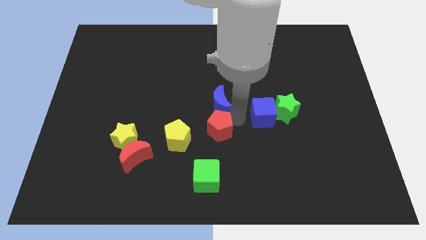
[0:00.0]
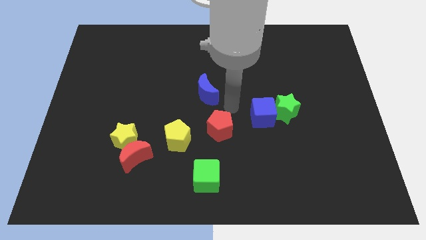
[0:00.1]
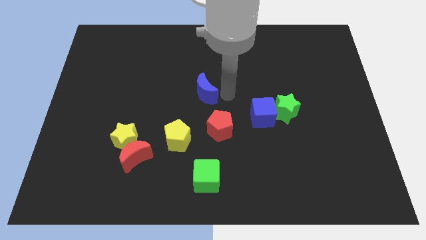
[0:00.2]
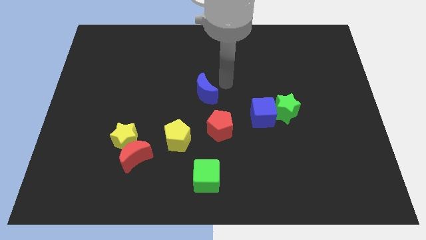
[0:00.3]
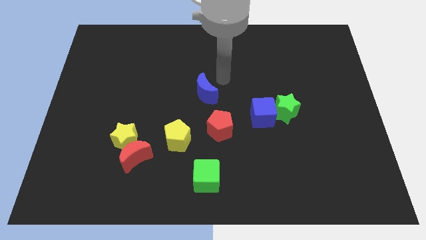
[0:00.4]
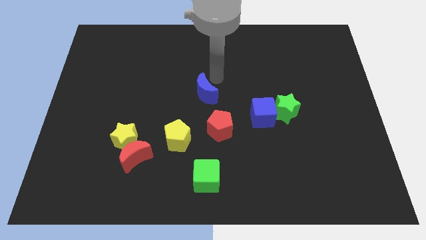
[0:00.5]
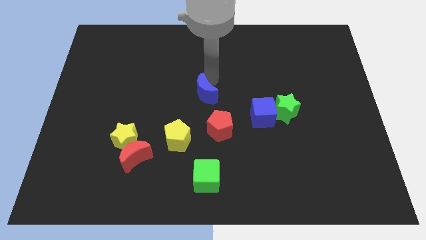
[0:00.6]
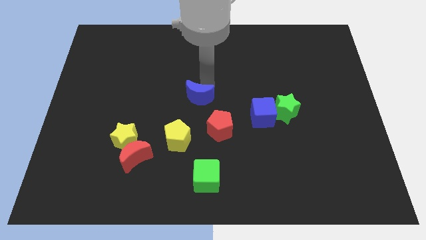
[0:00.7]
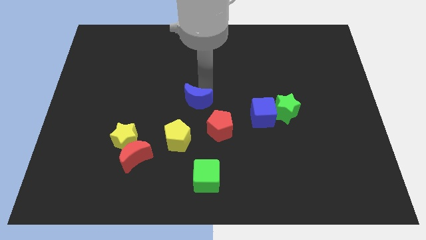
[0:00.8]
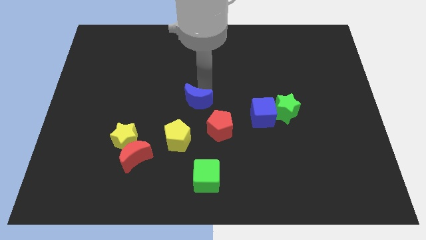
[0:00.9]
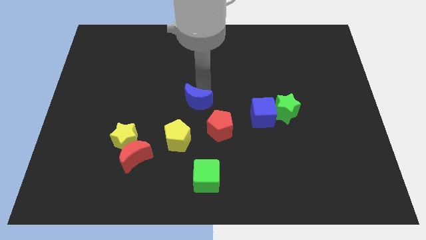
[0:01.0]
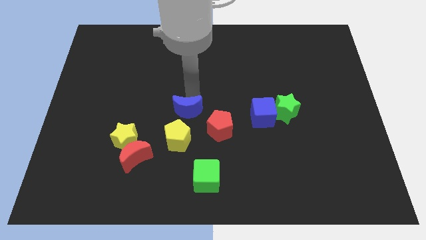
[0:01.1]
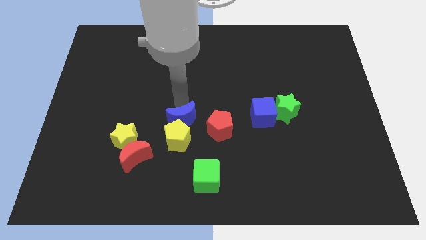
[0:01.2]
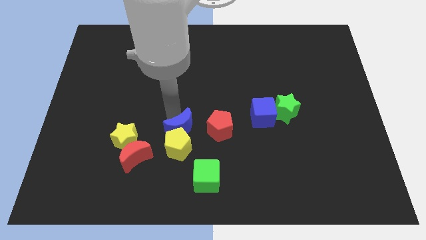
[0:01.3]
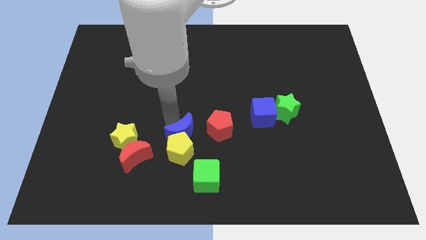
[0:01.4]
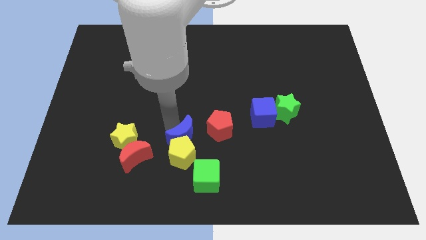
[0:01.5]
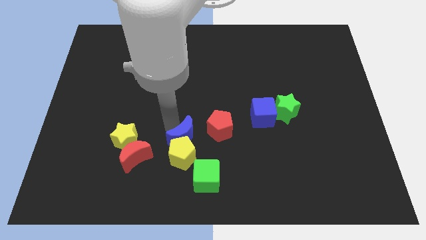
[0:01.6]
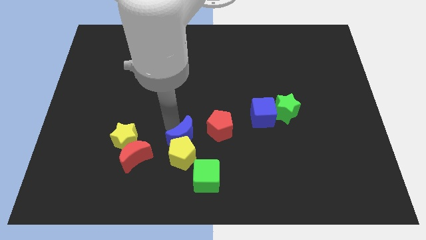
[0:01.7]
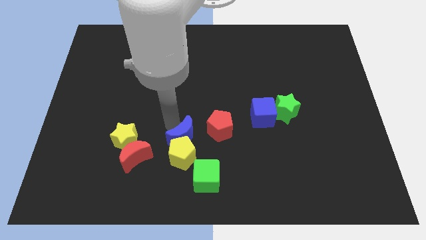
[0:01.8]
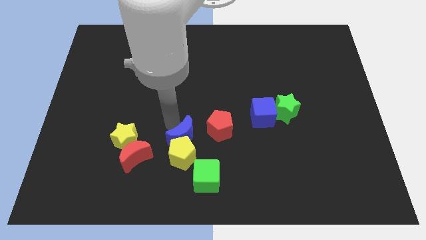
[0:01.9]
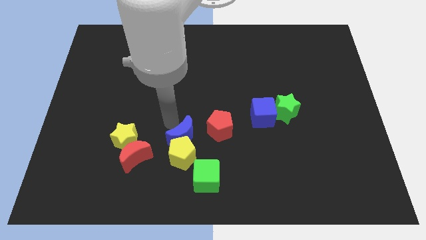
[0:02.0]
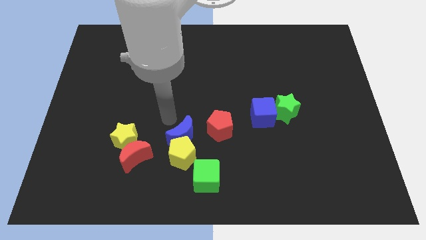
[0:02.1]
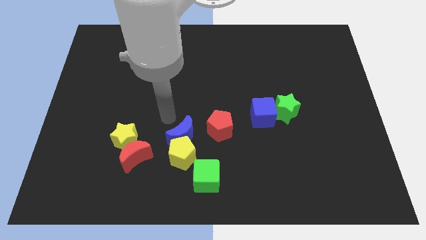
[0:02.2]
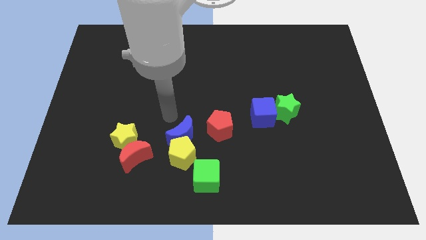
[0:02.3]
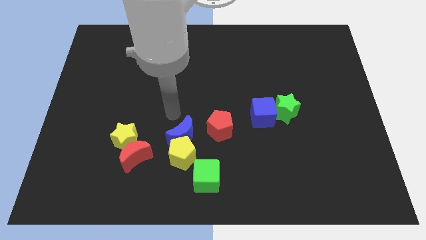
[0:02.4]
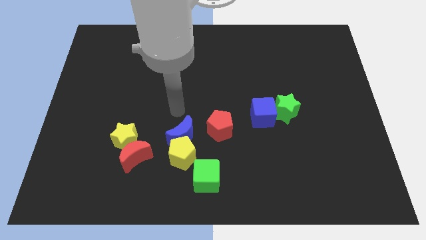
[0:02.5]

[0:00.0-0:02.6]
push blue moon into the yellow pentagon

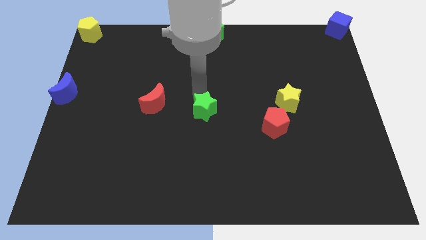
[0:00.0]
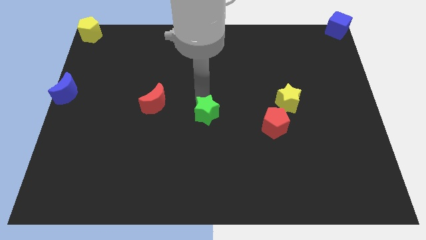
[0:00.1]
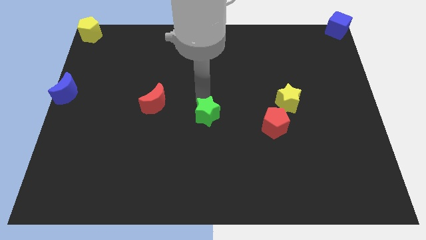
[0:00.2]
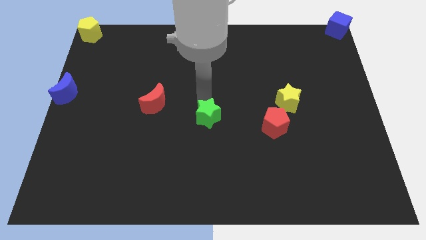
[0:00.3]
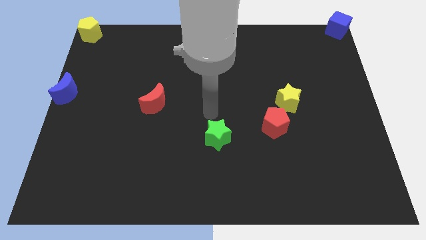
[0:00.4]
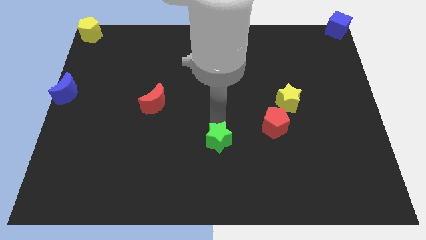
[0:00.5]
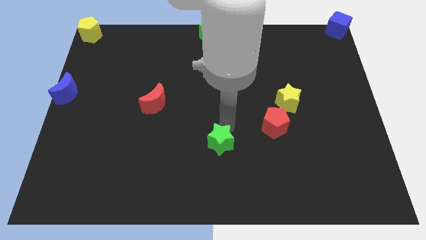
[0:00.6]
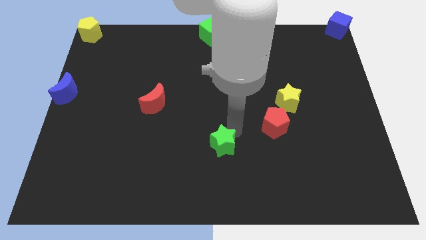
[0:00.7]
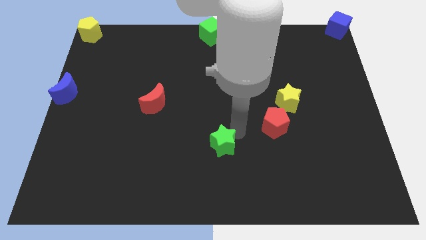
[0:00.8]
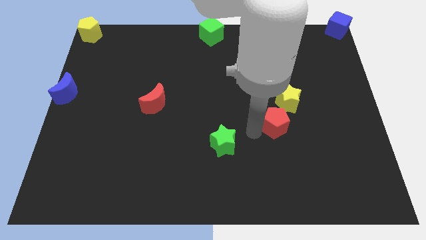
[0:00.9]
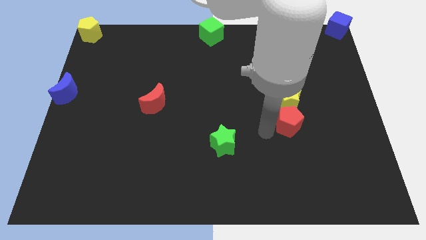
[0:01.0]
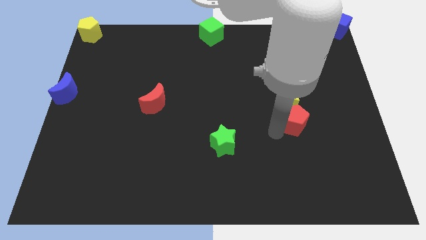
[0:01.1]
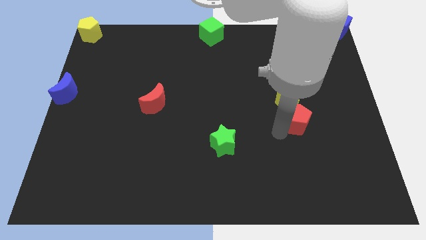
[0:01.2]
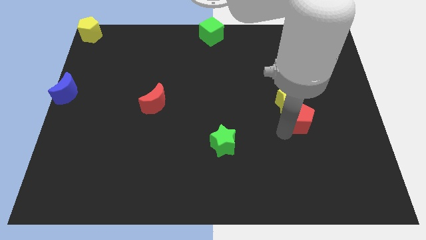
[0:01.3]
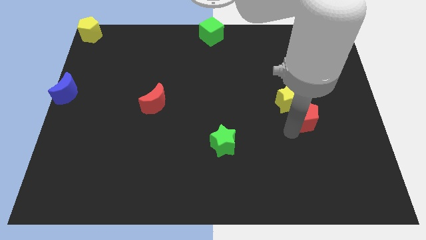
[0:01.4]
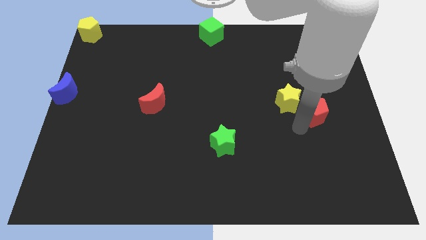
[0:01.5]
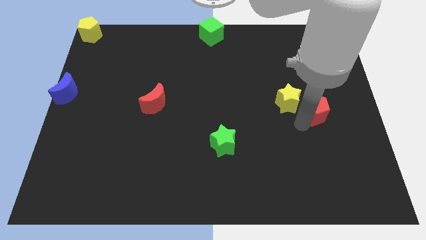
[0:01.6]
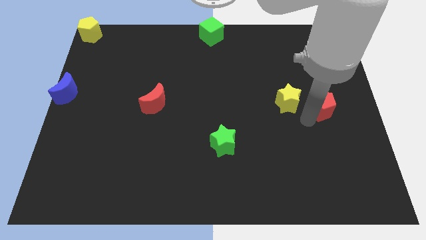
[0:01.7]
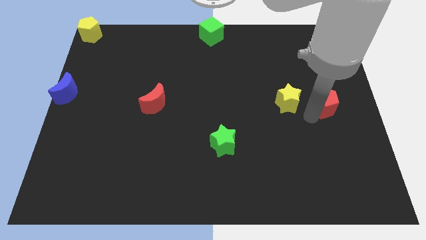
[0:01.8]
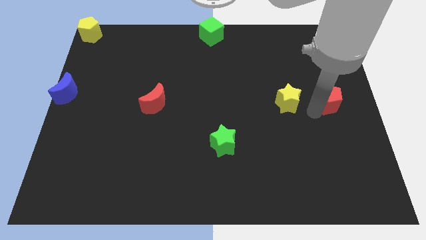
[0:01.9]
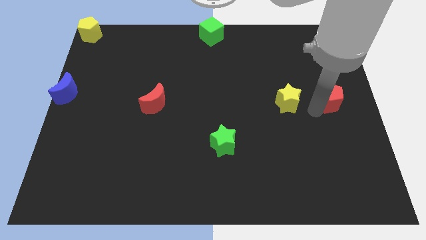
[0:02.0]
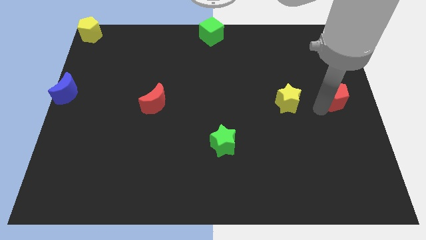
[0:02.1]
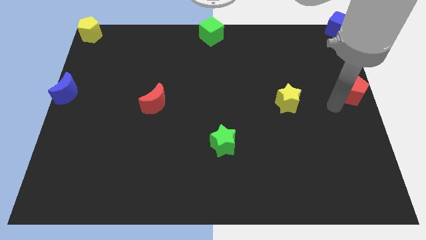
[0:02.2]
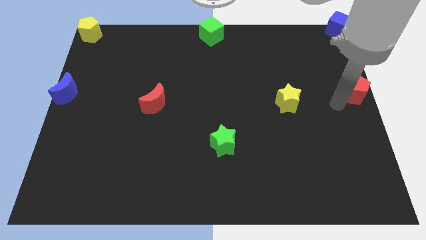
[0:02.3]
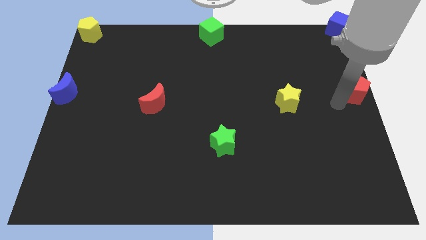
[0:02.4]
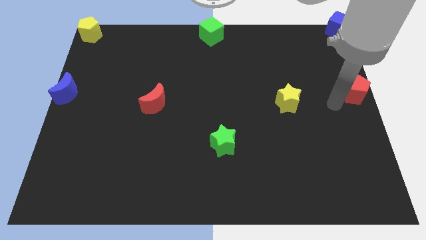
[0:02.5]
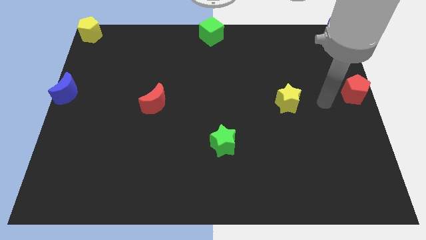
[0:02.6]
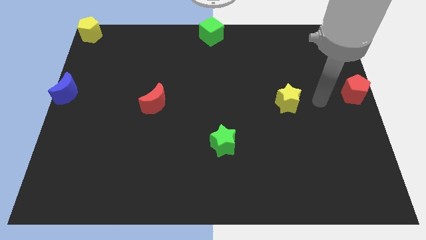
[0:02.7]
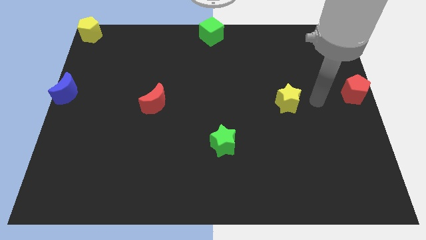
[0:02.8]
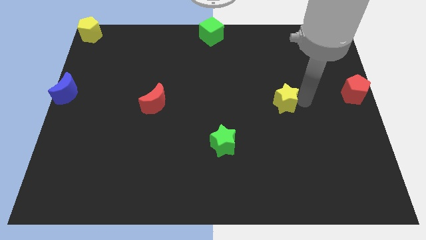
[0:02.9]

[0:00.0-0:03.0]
move the red pentagon to right center of the board

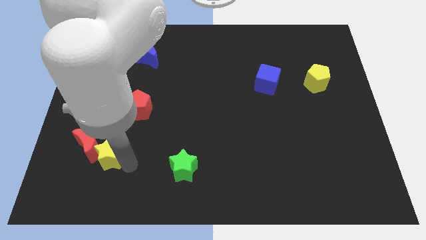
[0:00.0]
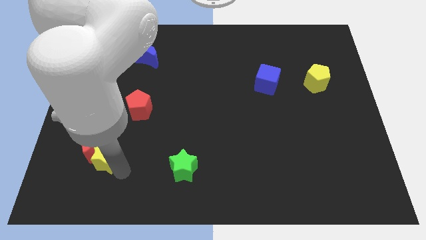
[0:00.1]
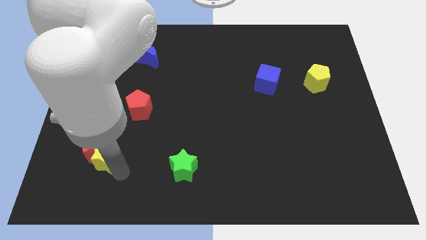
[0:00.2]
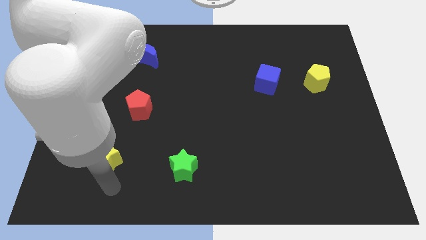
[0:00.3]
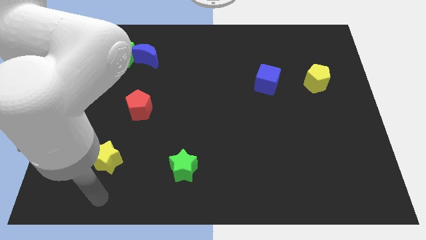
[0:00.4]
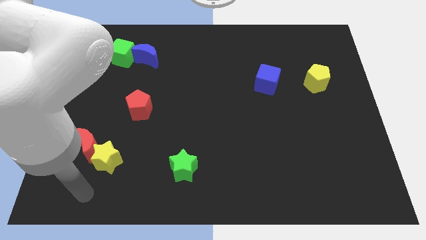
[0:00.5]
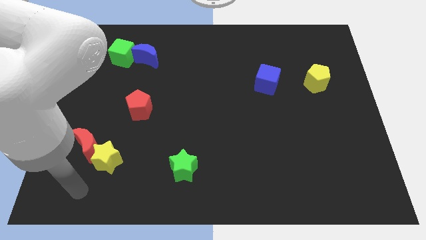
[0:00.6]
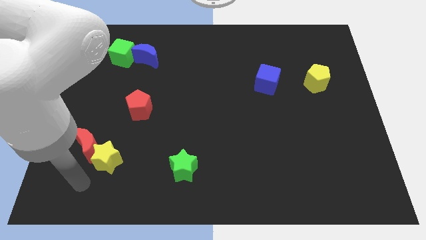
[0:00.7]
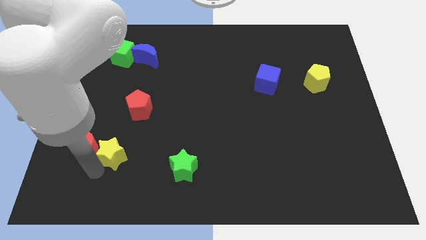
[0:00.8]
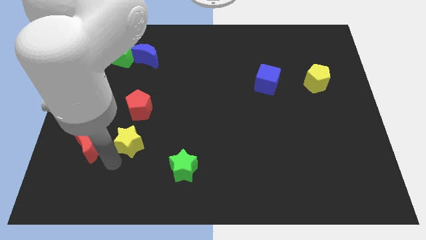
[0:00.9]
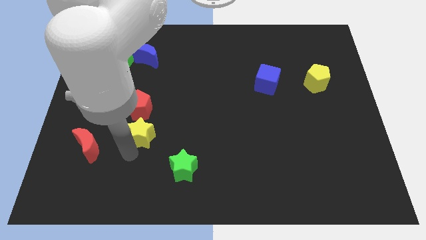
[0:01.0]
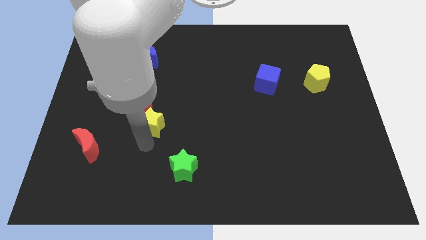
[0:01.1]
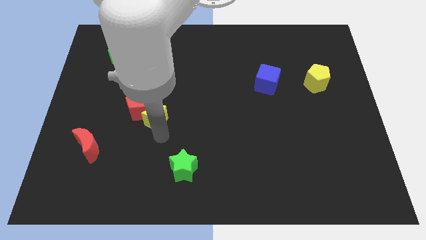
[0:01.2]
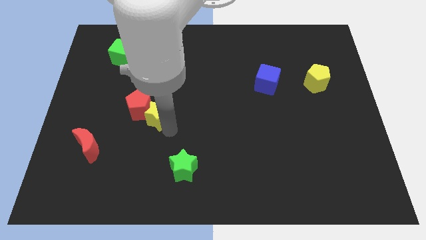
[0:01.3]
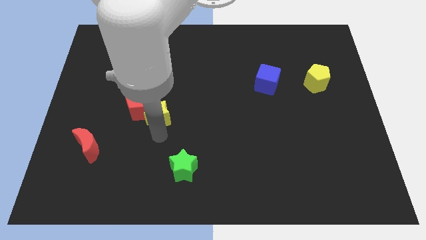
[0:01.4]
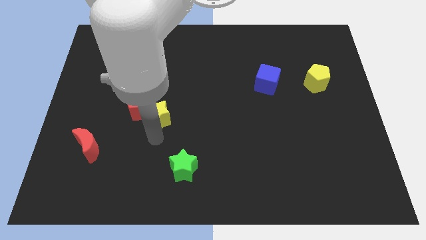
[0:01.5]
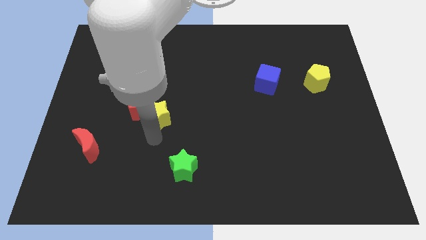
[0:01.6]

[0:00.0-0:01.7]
place the yellow star to the bottom right side of the red pentagon

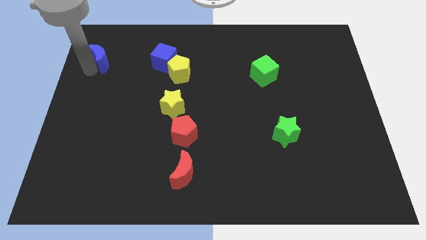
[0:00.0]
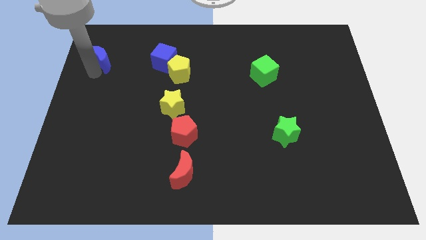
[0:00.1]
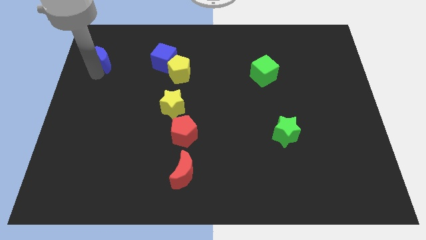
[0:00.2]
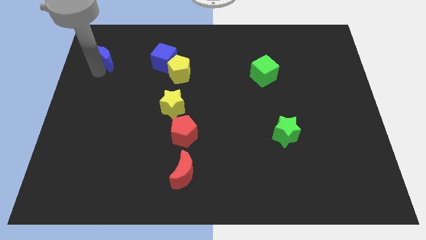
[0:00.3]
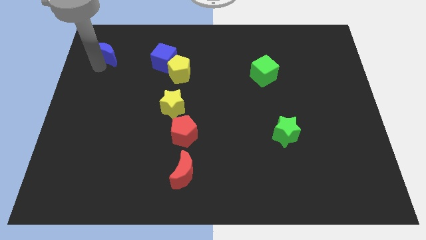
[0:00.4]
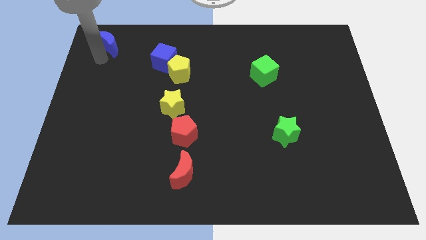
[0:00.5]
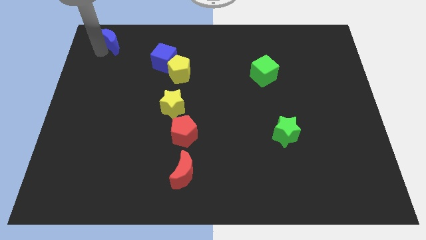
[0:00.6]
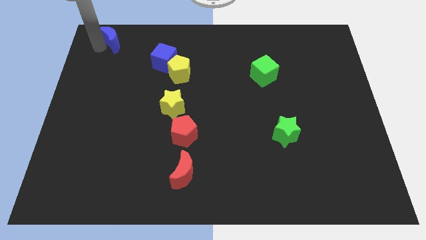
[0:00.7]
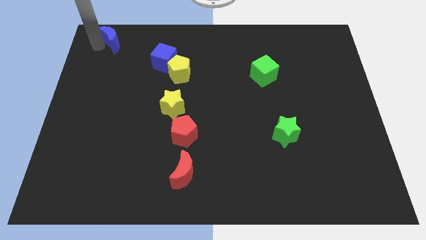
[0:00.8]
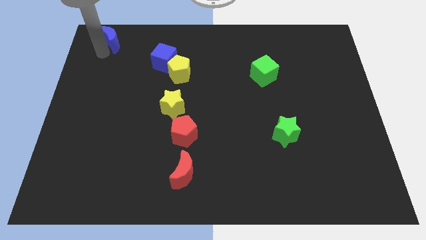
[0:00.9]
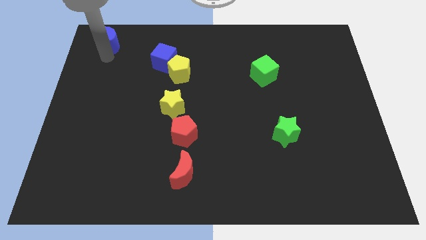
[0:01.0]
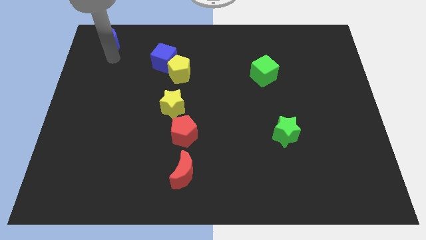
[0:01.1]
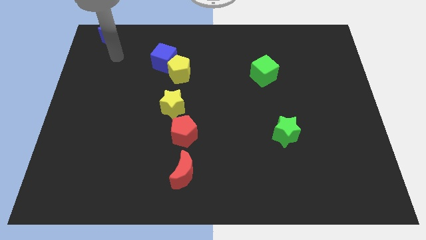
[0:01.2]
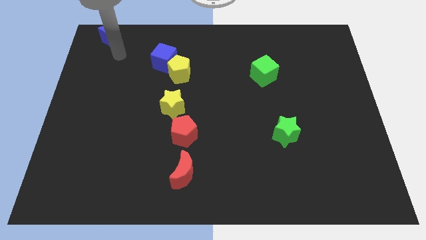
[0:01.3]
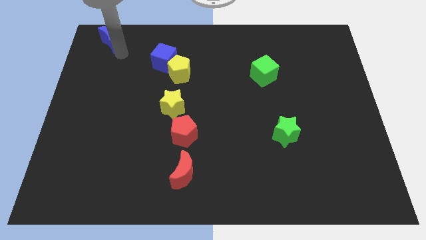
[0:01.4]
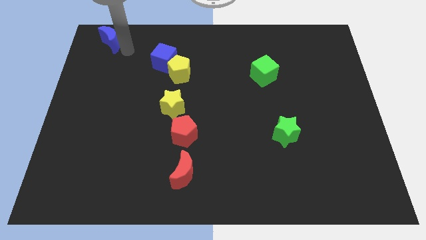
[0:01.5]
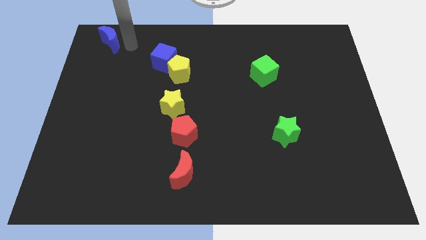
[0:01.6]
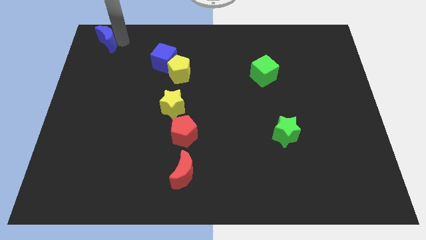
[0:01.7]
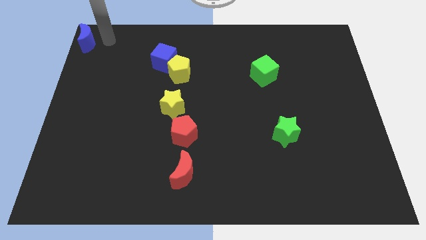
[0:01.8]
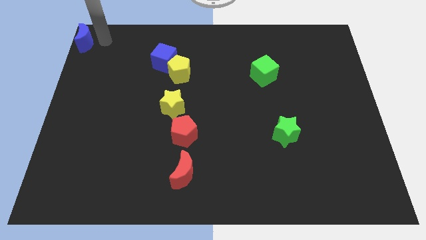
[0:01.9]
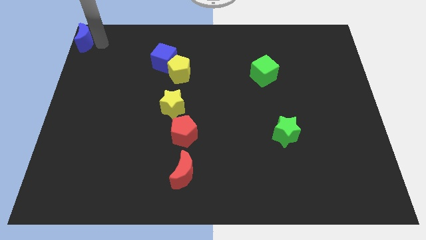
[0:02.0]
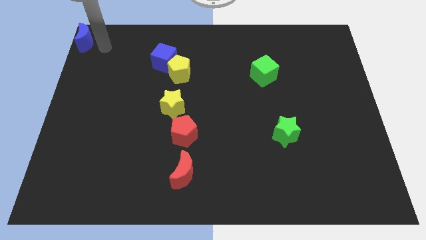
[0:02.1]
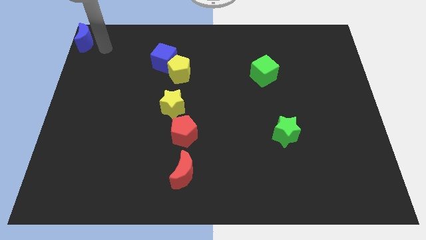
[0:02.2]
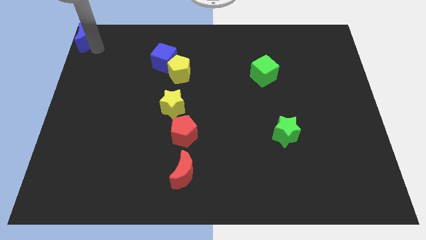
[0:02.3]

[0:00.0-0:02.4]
push the blue crescent to the top left corner of the board
